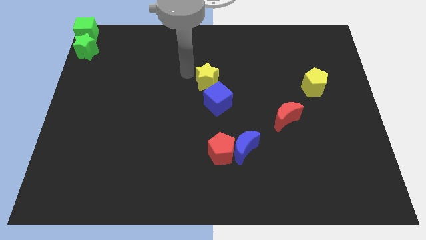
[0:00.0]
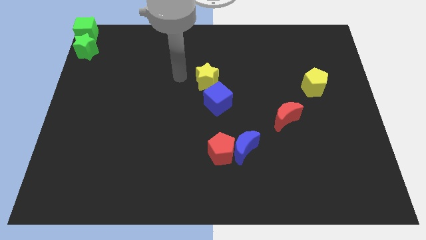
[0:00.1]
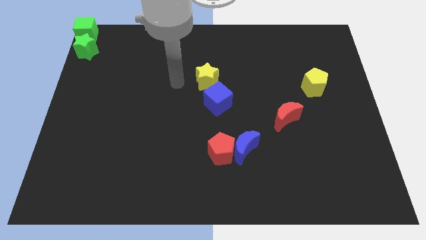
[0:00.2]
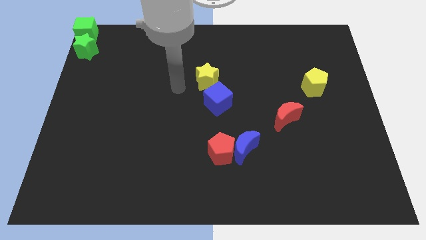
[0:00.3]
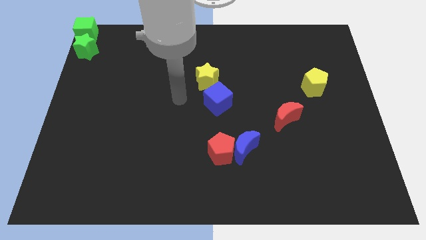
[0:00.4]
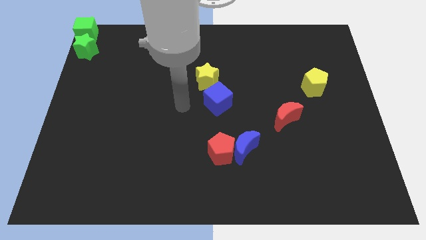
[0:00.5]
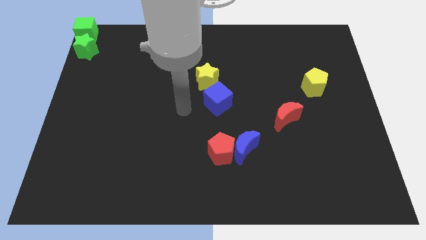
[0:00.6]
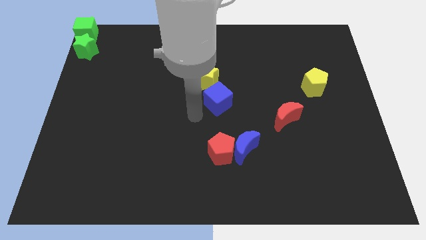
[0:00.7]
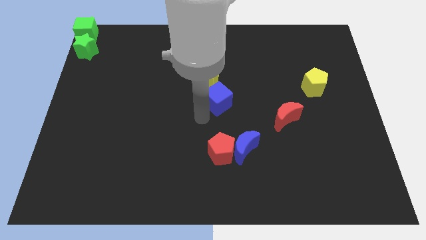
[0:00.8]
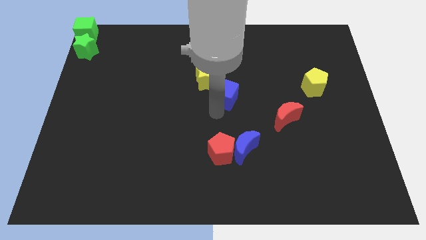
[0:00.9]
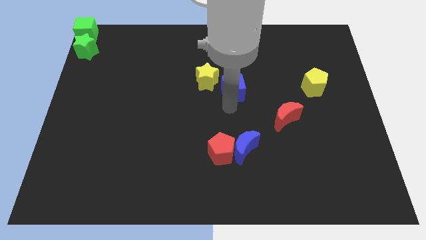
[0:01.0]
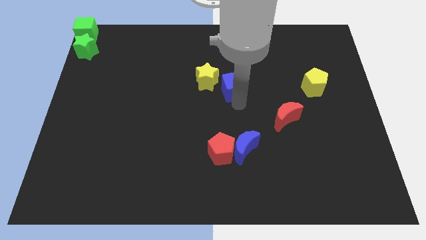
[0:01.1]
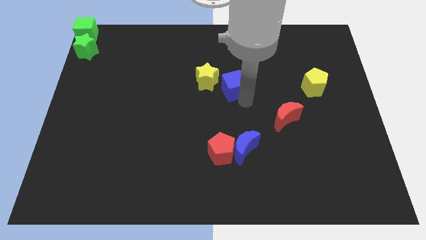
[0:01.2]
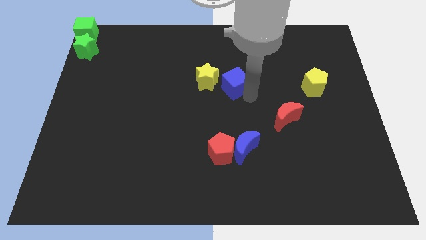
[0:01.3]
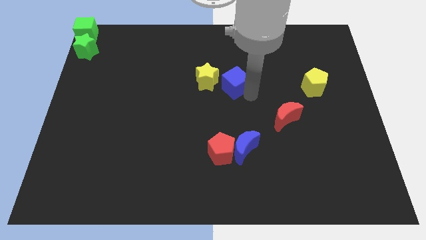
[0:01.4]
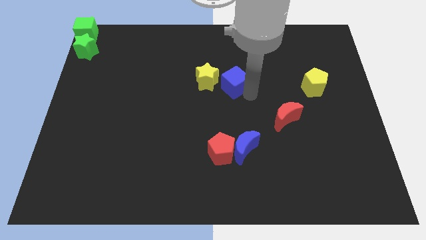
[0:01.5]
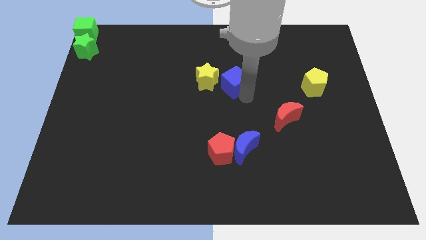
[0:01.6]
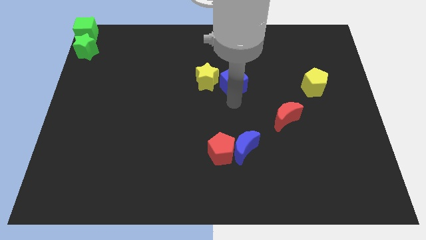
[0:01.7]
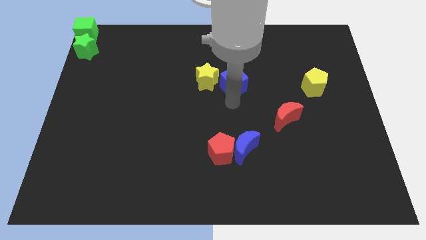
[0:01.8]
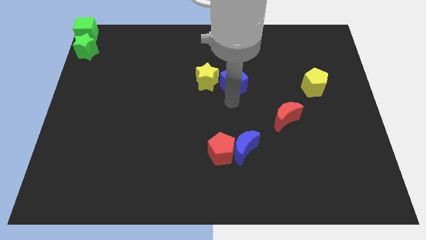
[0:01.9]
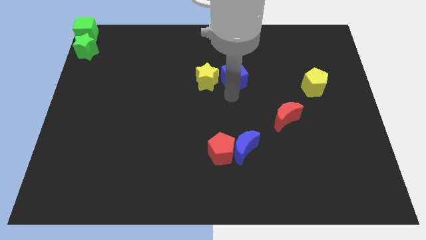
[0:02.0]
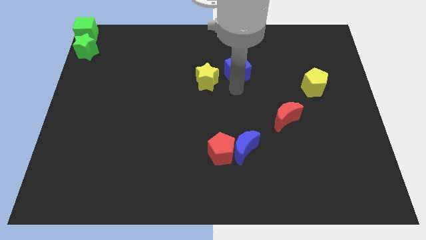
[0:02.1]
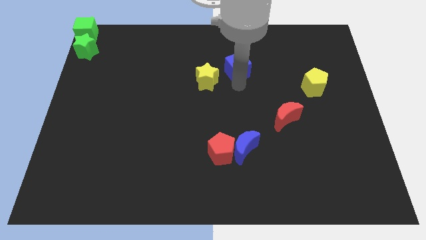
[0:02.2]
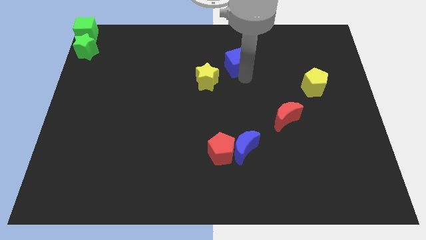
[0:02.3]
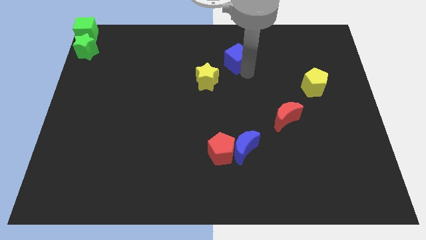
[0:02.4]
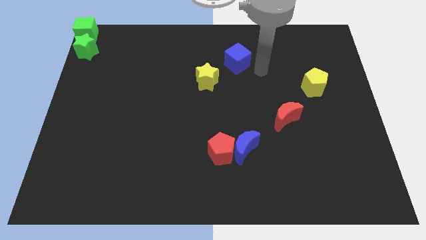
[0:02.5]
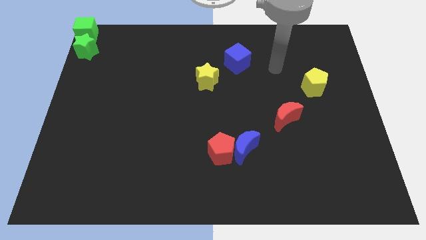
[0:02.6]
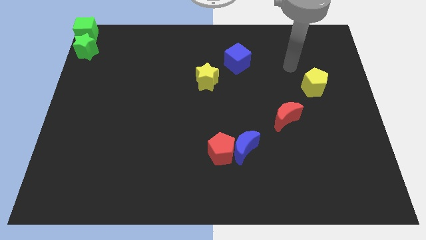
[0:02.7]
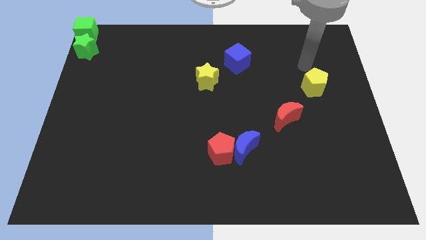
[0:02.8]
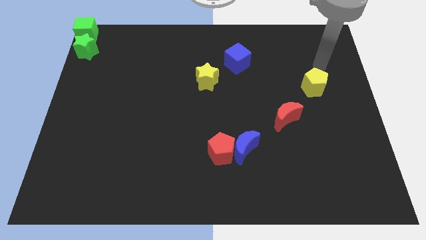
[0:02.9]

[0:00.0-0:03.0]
separate the blue cube from the yellow star

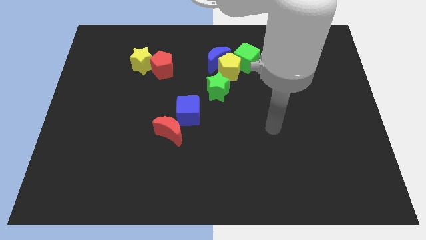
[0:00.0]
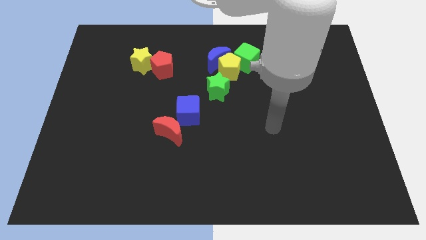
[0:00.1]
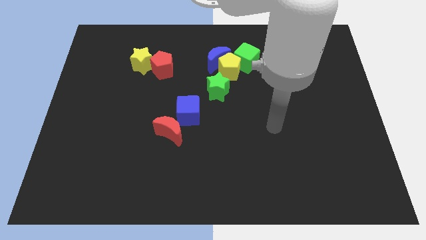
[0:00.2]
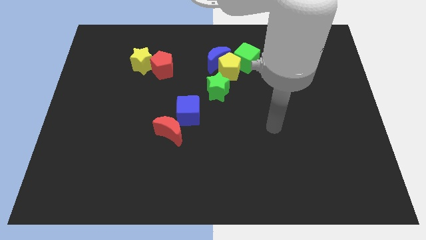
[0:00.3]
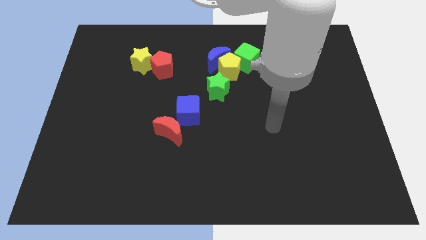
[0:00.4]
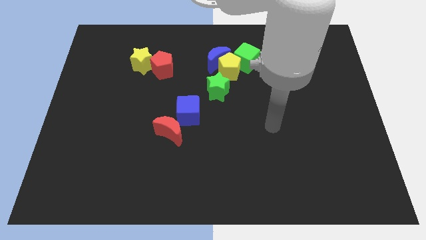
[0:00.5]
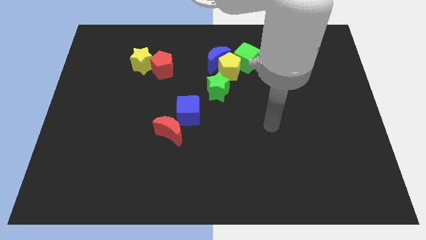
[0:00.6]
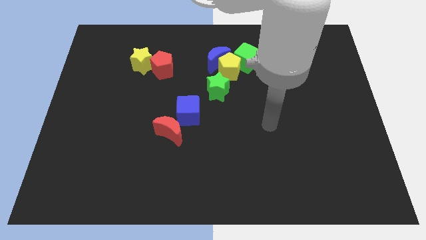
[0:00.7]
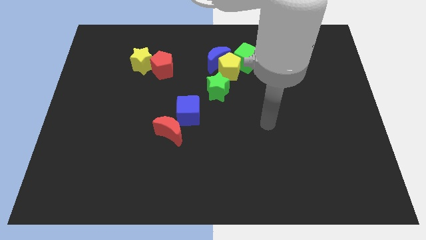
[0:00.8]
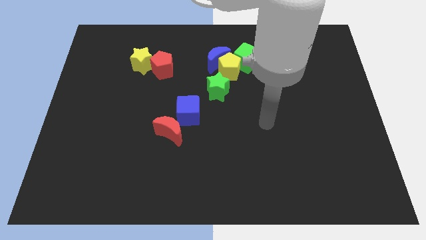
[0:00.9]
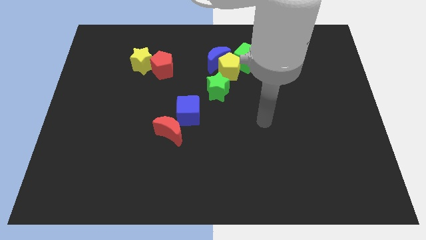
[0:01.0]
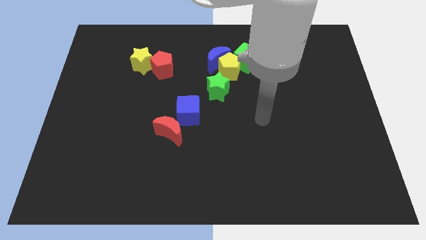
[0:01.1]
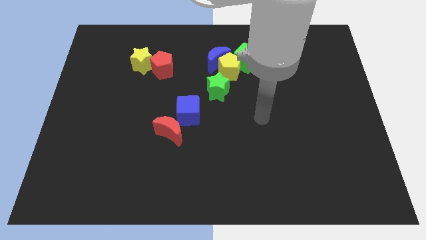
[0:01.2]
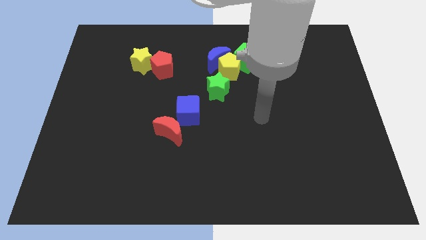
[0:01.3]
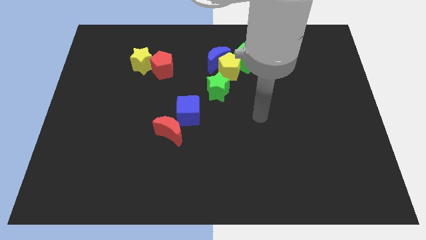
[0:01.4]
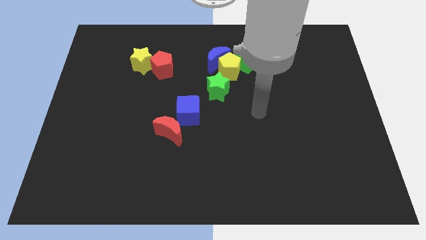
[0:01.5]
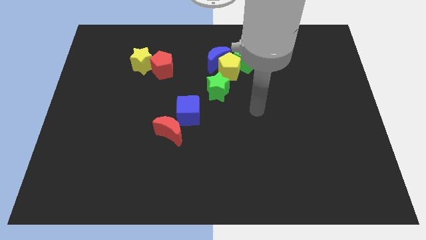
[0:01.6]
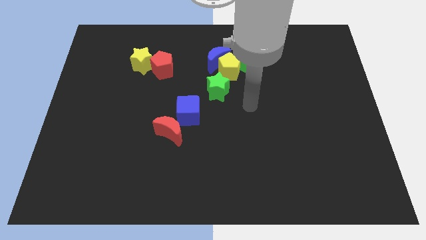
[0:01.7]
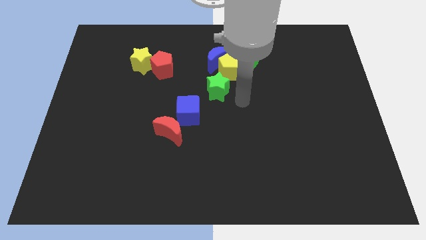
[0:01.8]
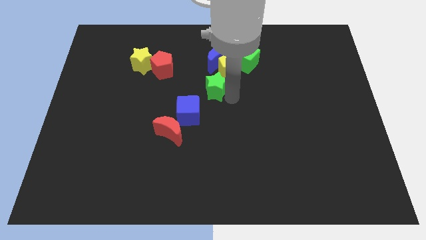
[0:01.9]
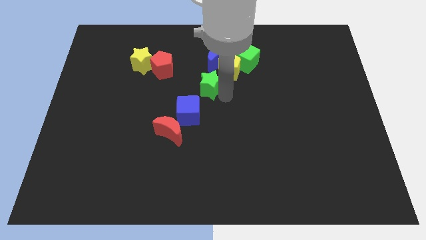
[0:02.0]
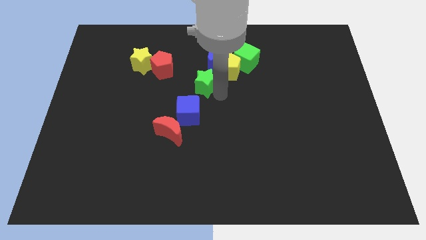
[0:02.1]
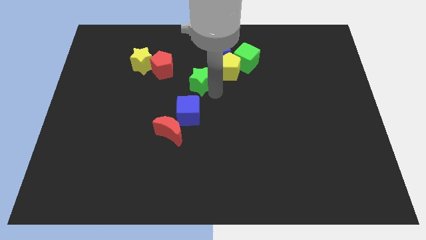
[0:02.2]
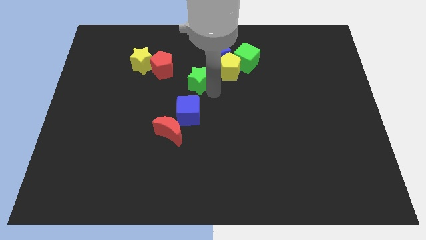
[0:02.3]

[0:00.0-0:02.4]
place the green star diagonal to the yellow pentagon

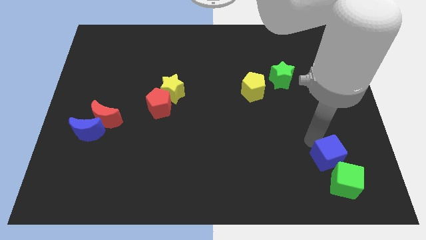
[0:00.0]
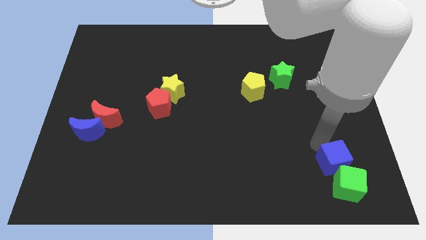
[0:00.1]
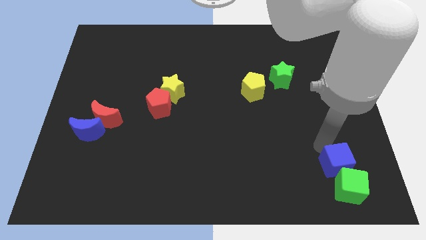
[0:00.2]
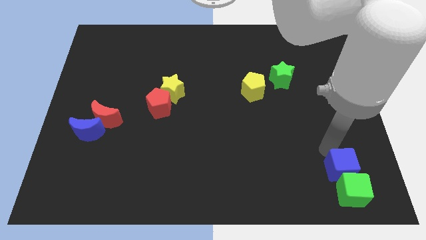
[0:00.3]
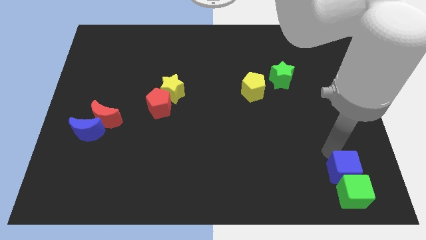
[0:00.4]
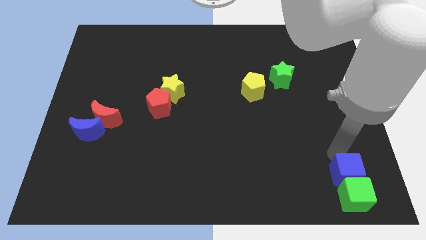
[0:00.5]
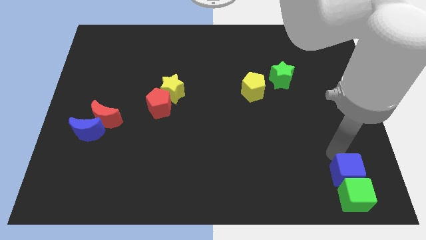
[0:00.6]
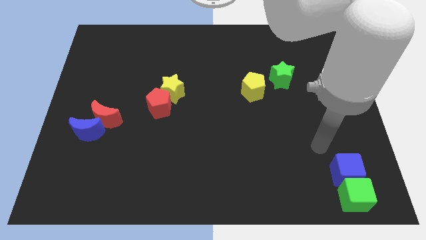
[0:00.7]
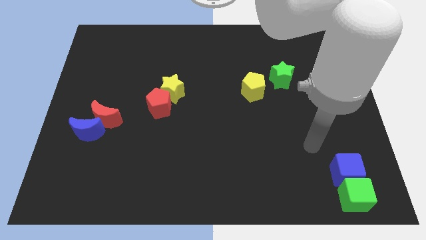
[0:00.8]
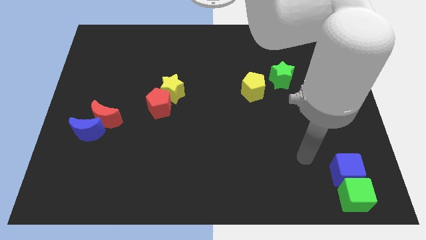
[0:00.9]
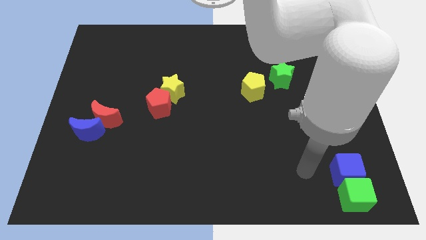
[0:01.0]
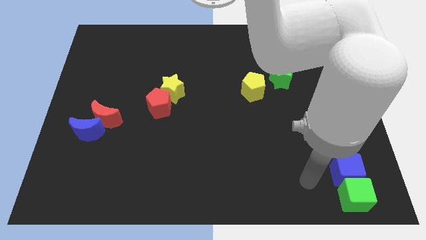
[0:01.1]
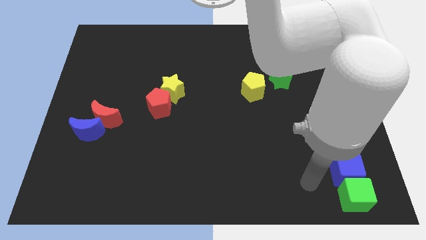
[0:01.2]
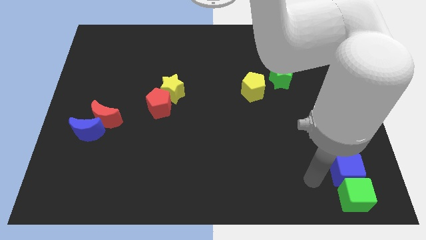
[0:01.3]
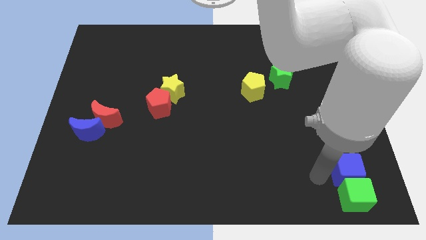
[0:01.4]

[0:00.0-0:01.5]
push blue cube along with the green cube to the bottom right corner of the board

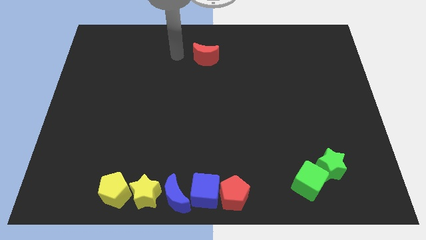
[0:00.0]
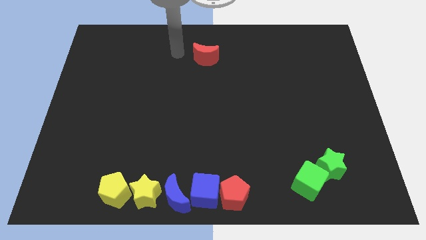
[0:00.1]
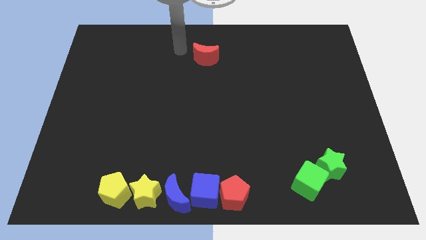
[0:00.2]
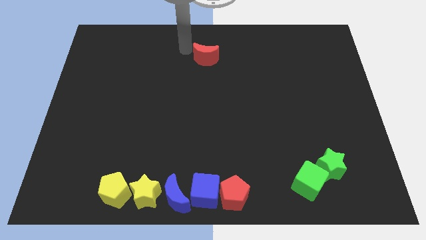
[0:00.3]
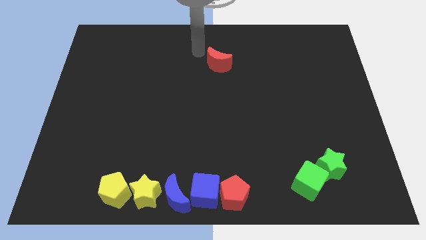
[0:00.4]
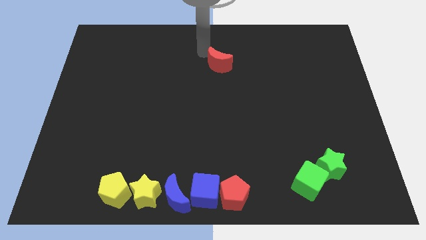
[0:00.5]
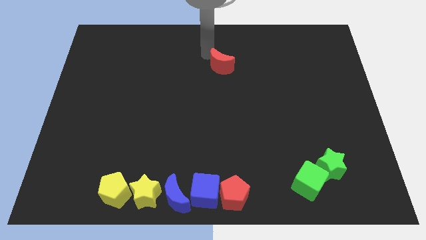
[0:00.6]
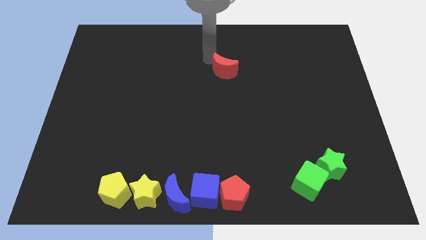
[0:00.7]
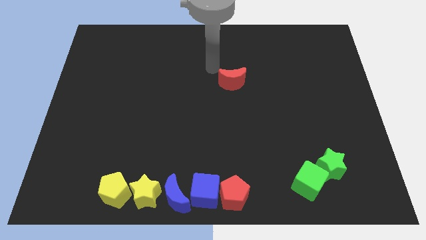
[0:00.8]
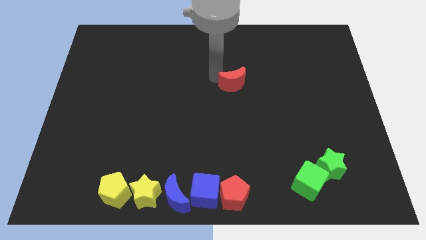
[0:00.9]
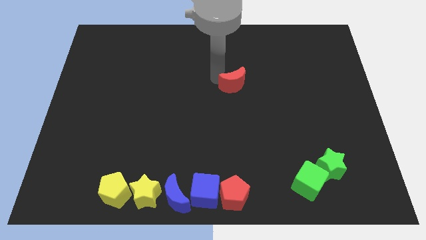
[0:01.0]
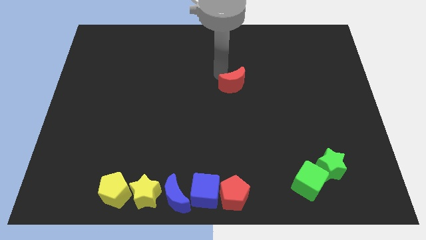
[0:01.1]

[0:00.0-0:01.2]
push the red moon slightly down

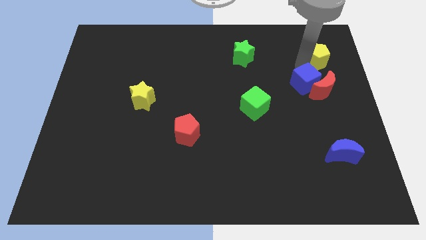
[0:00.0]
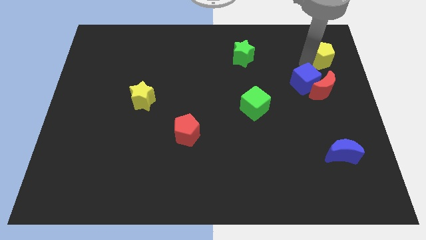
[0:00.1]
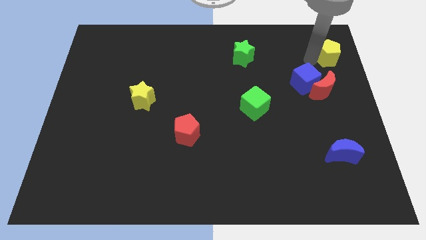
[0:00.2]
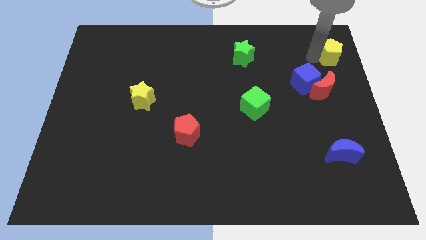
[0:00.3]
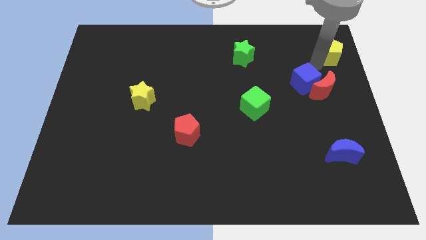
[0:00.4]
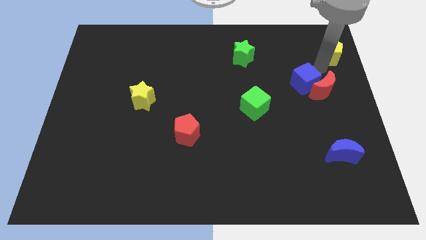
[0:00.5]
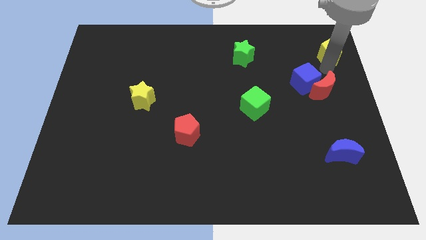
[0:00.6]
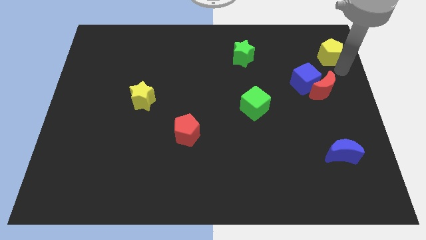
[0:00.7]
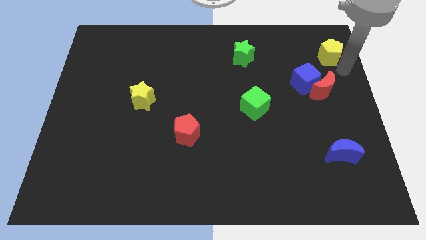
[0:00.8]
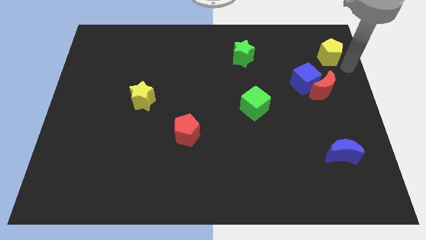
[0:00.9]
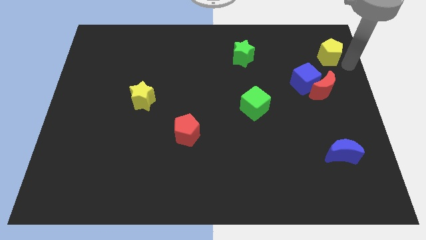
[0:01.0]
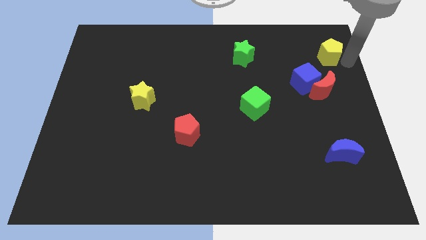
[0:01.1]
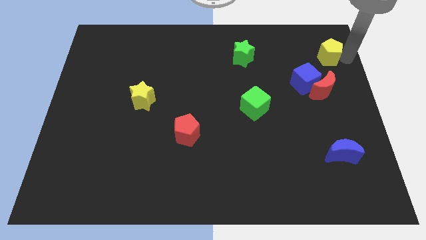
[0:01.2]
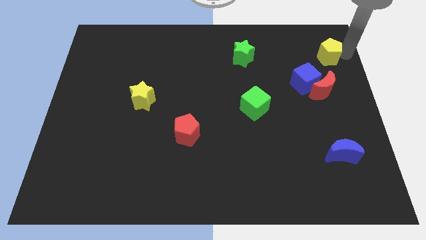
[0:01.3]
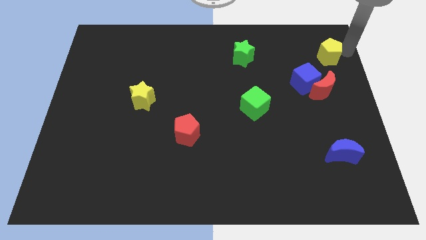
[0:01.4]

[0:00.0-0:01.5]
push the yellow pentagon slightly to the top
